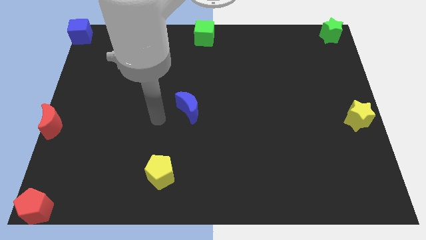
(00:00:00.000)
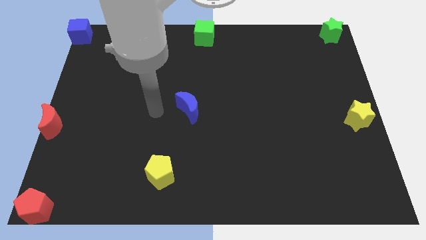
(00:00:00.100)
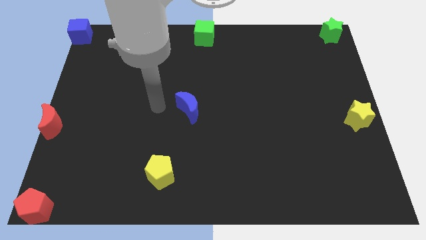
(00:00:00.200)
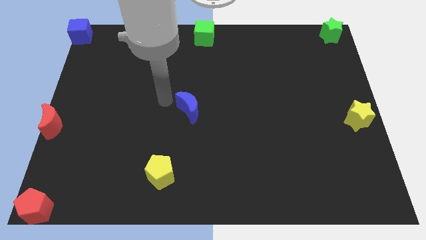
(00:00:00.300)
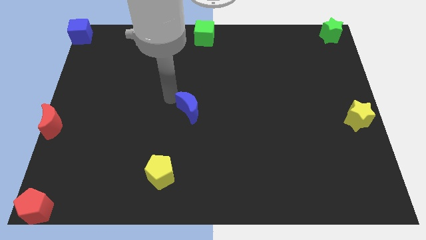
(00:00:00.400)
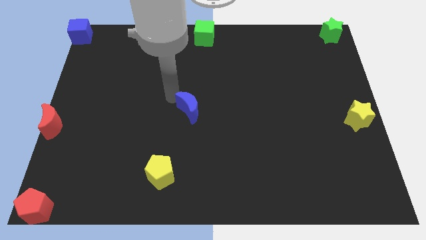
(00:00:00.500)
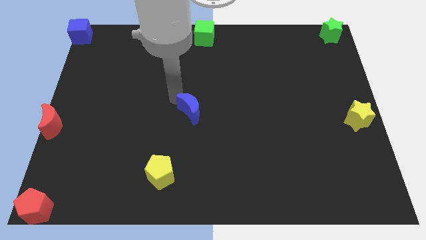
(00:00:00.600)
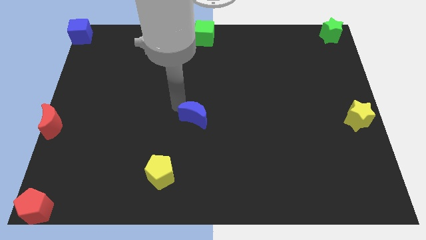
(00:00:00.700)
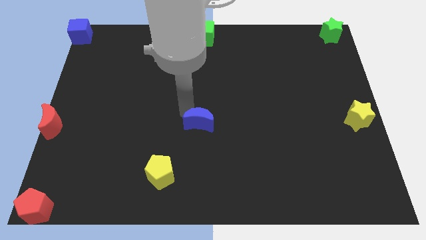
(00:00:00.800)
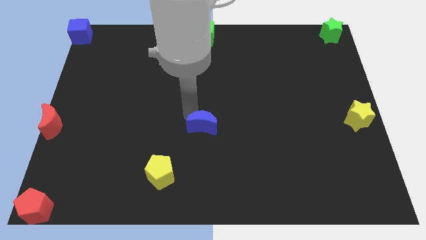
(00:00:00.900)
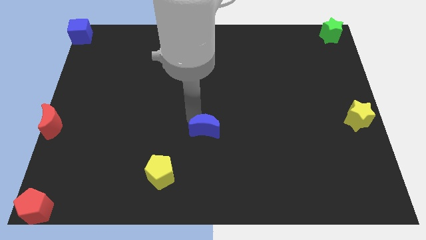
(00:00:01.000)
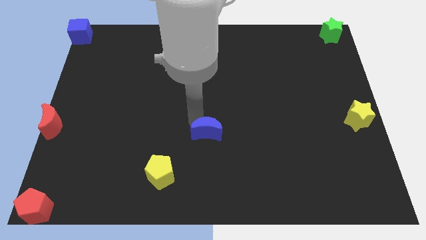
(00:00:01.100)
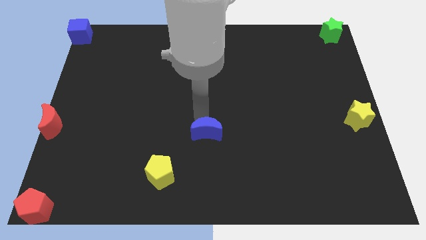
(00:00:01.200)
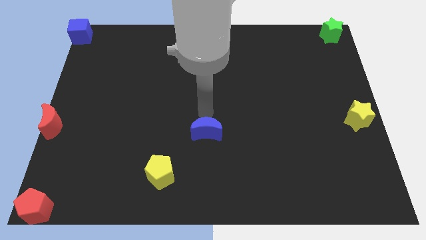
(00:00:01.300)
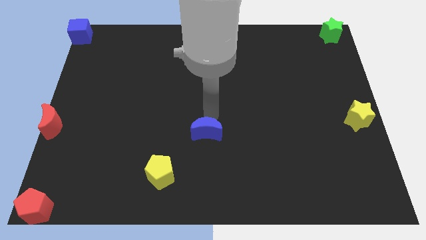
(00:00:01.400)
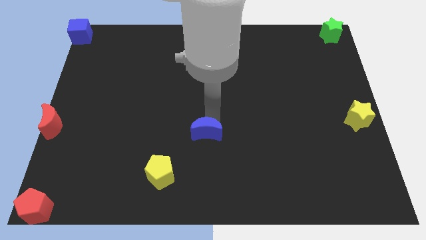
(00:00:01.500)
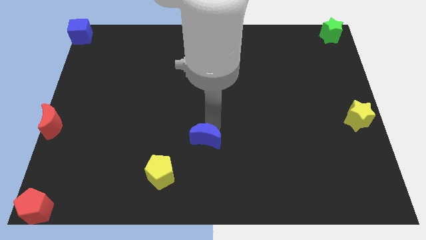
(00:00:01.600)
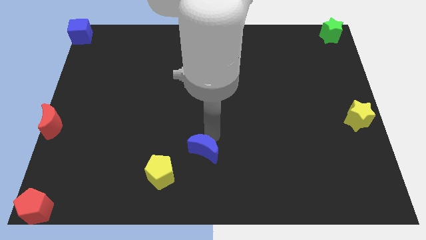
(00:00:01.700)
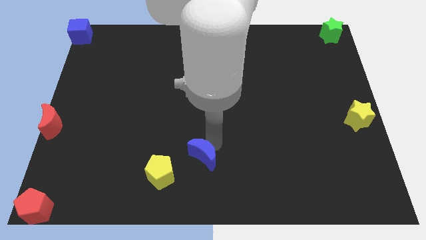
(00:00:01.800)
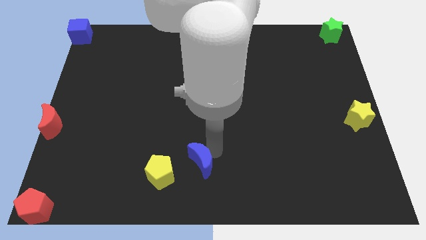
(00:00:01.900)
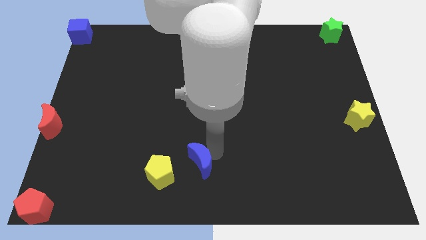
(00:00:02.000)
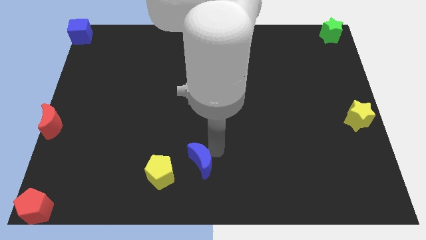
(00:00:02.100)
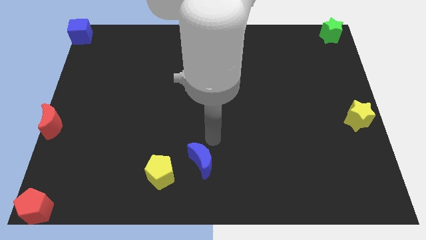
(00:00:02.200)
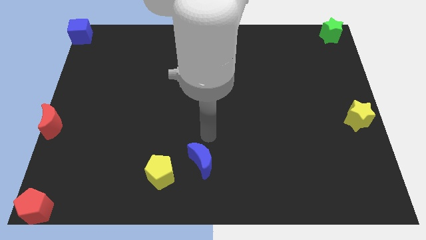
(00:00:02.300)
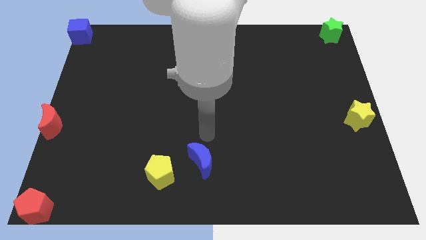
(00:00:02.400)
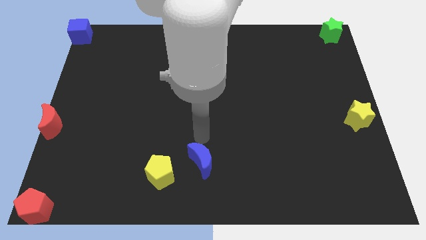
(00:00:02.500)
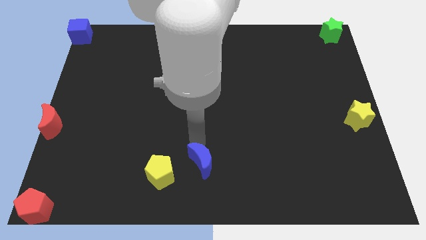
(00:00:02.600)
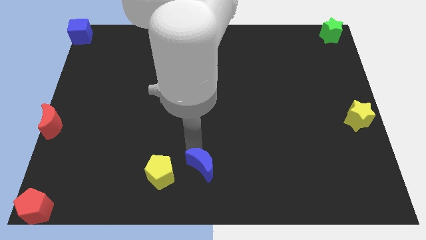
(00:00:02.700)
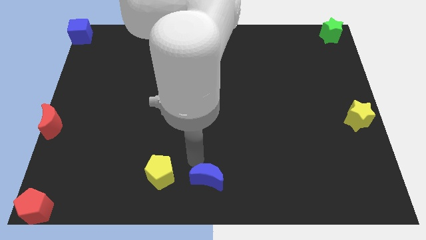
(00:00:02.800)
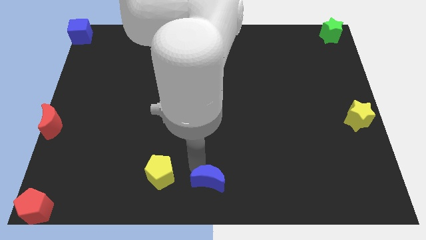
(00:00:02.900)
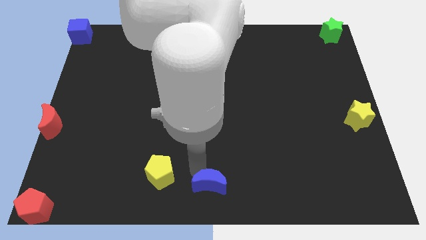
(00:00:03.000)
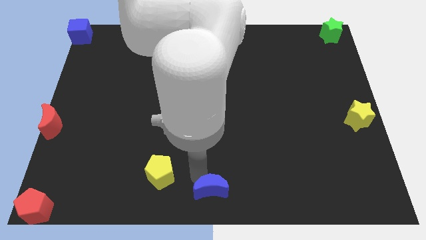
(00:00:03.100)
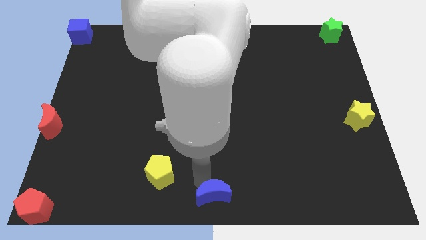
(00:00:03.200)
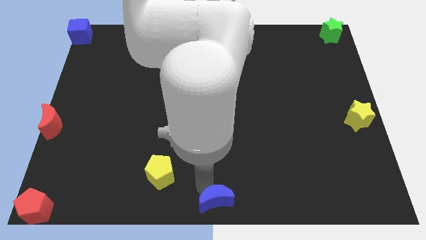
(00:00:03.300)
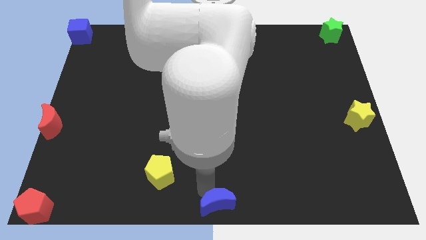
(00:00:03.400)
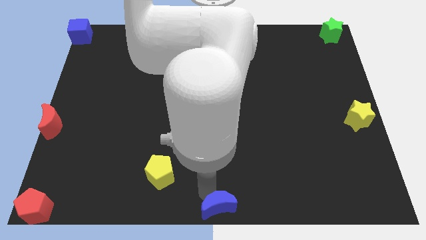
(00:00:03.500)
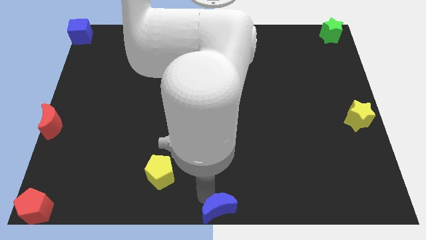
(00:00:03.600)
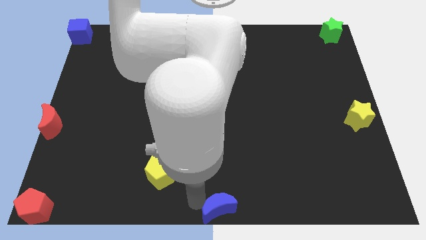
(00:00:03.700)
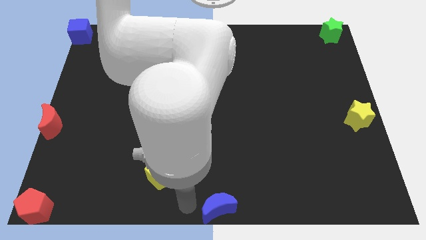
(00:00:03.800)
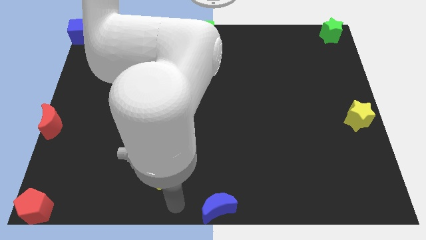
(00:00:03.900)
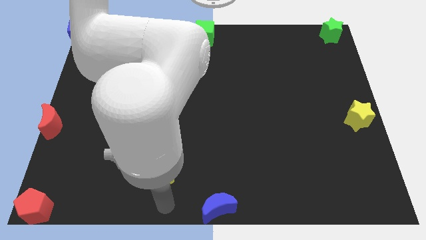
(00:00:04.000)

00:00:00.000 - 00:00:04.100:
move red crescent to the bottom centre of the board

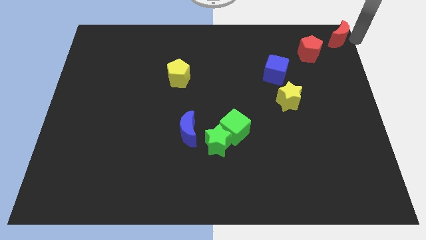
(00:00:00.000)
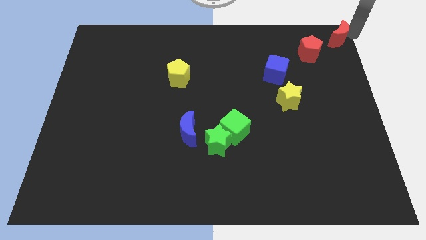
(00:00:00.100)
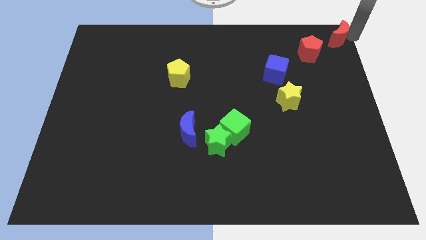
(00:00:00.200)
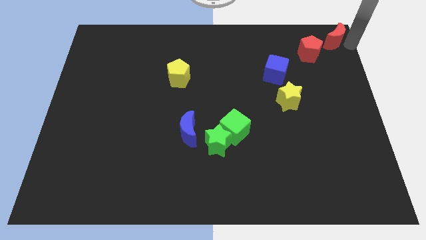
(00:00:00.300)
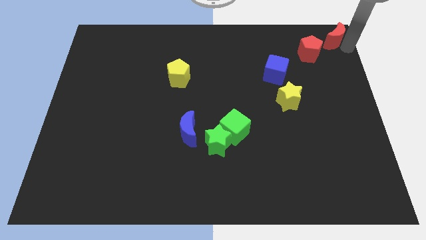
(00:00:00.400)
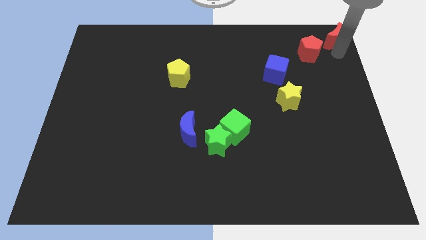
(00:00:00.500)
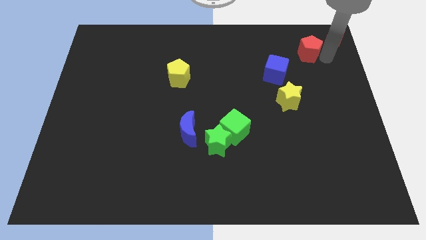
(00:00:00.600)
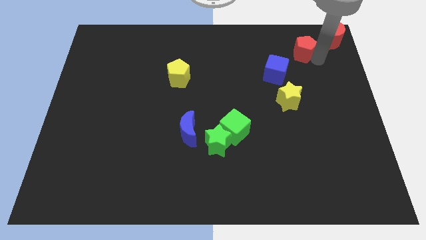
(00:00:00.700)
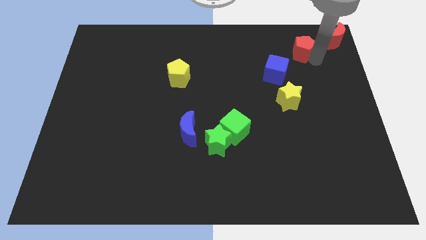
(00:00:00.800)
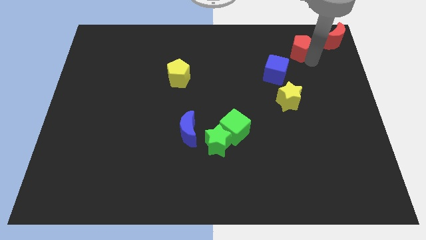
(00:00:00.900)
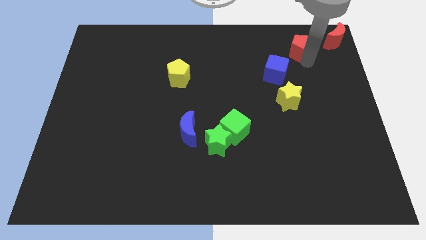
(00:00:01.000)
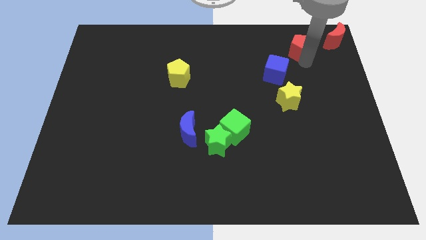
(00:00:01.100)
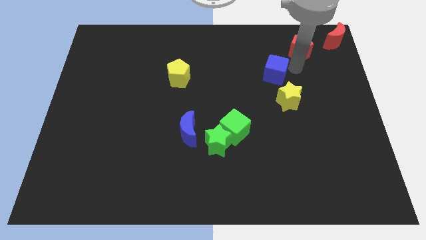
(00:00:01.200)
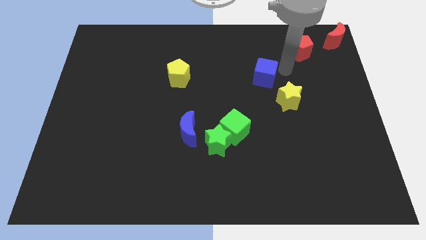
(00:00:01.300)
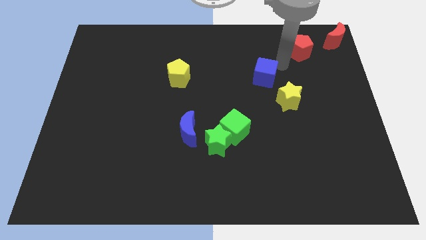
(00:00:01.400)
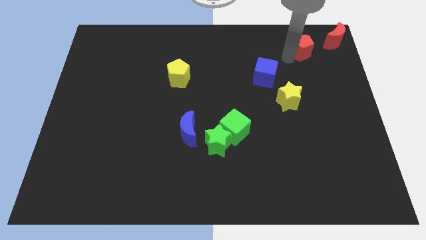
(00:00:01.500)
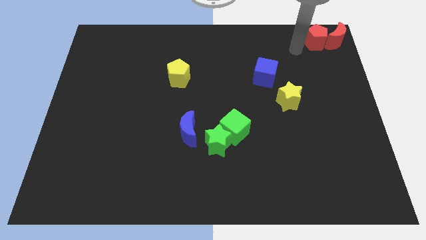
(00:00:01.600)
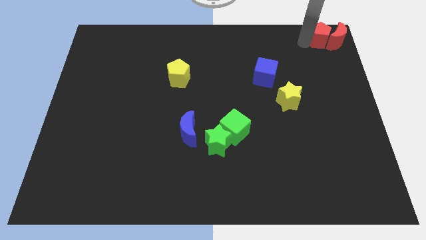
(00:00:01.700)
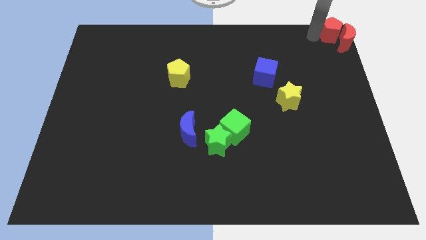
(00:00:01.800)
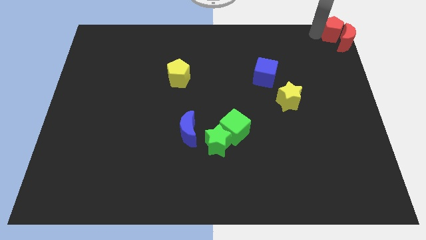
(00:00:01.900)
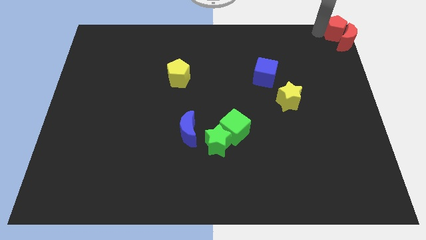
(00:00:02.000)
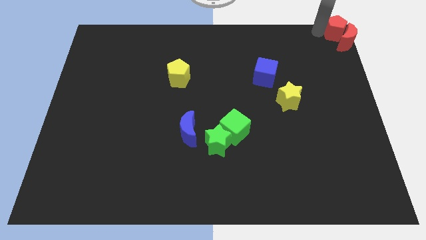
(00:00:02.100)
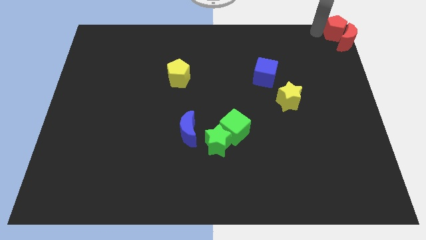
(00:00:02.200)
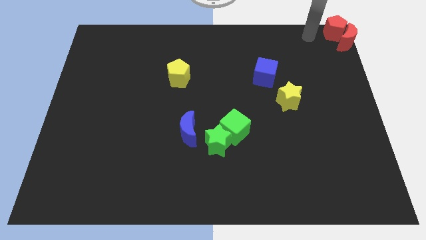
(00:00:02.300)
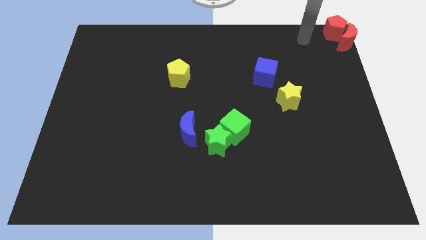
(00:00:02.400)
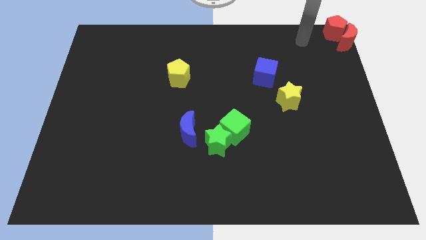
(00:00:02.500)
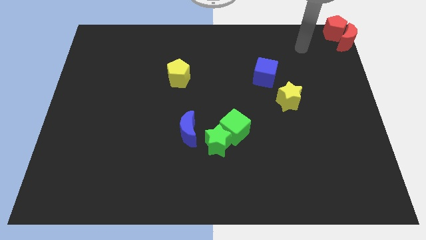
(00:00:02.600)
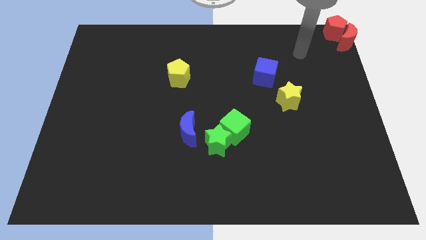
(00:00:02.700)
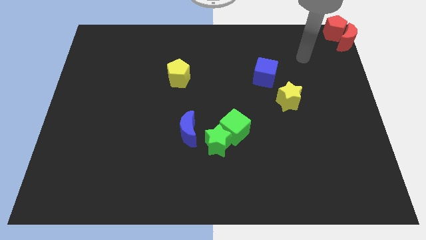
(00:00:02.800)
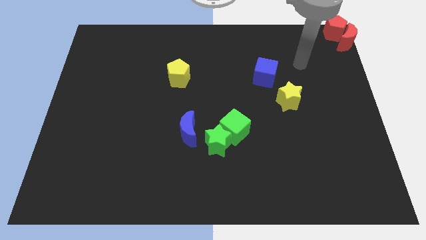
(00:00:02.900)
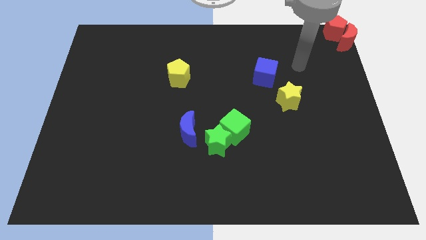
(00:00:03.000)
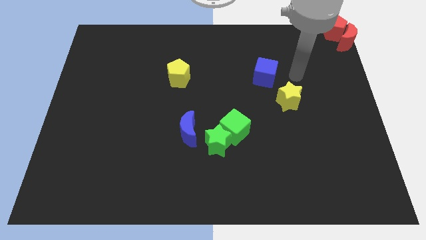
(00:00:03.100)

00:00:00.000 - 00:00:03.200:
adjust the red blocks at the top right corner

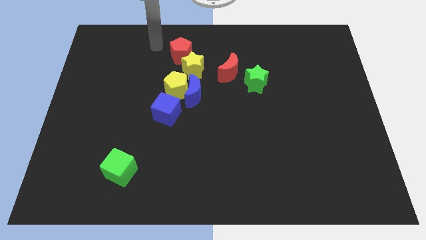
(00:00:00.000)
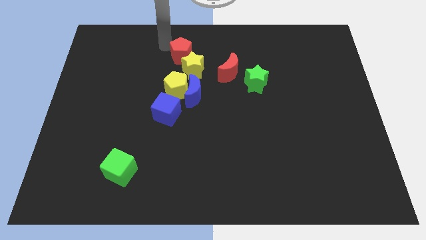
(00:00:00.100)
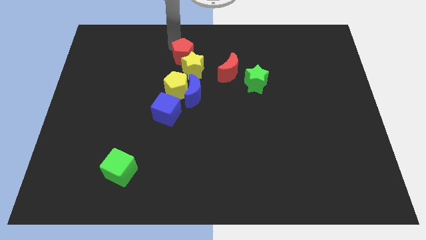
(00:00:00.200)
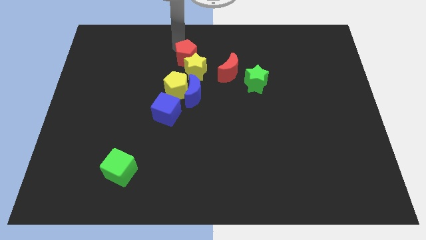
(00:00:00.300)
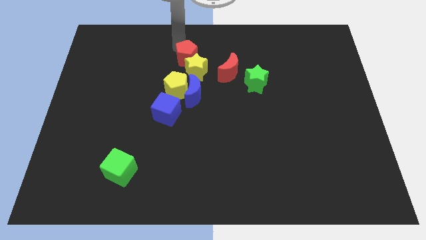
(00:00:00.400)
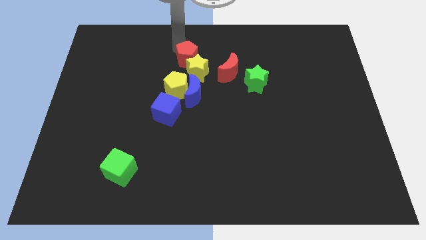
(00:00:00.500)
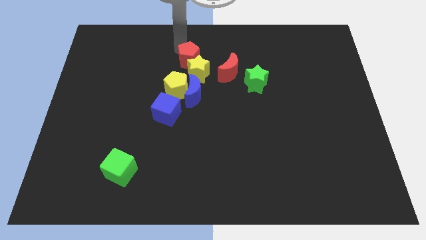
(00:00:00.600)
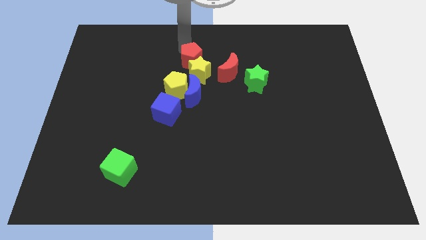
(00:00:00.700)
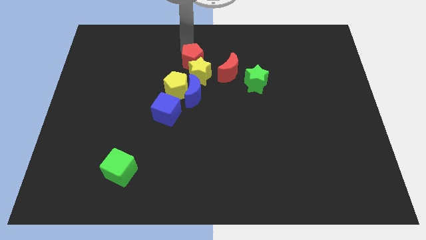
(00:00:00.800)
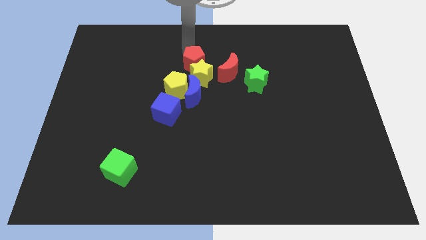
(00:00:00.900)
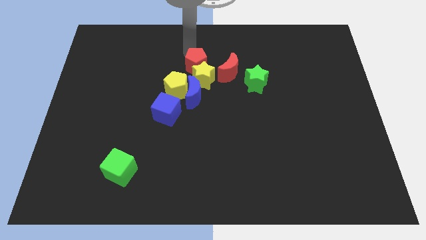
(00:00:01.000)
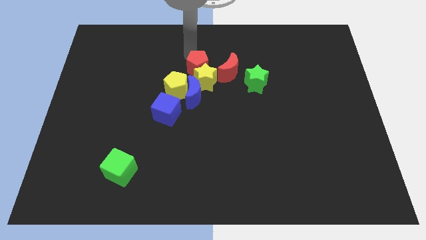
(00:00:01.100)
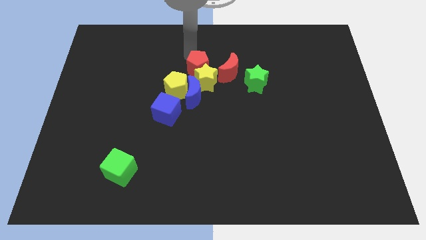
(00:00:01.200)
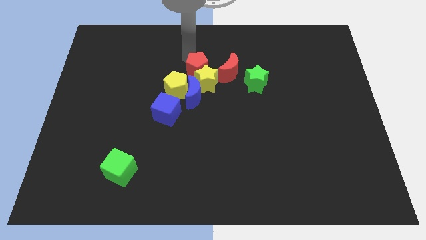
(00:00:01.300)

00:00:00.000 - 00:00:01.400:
drag the red pentagon and yellow star to the left side of the red crescent
